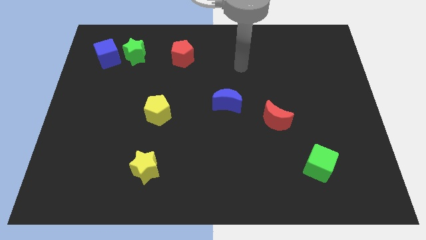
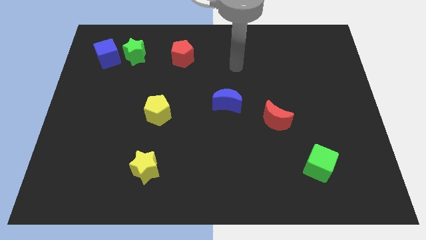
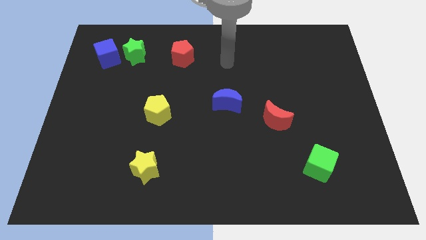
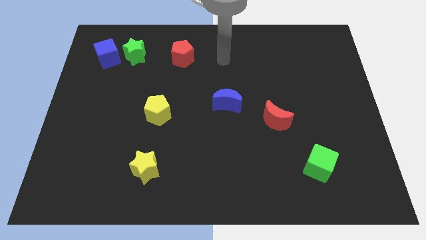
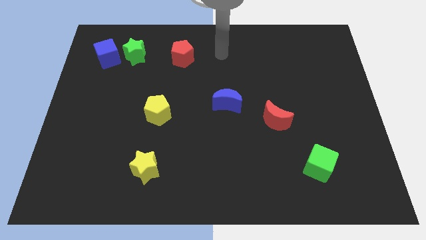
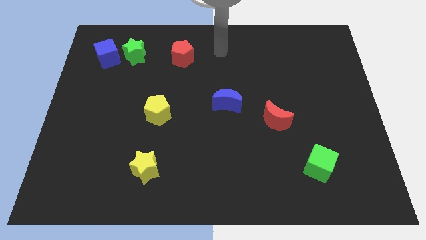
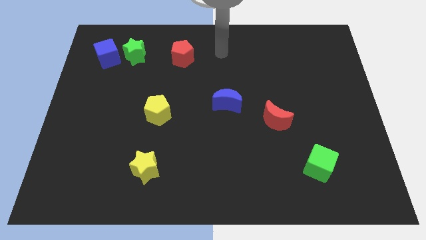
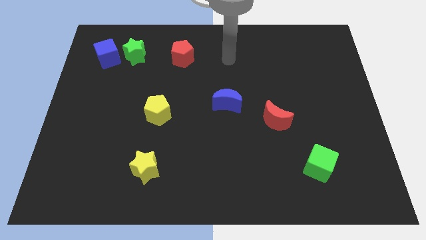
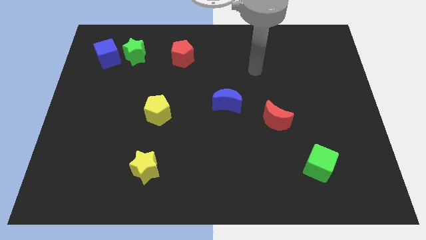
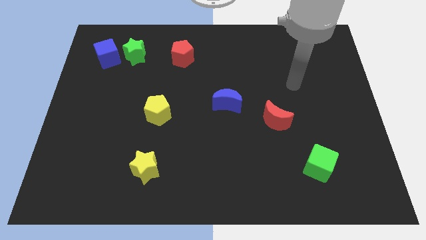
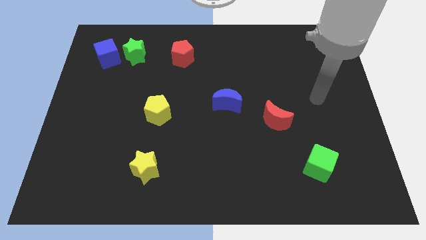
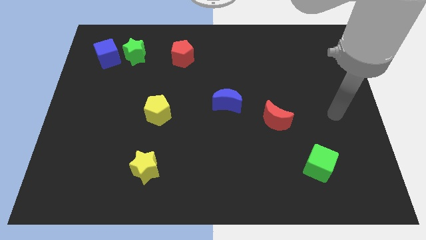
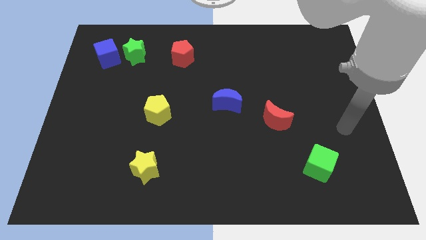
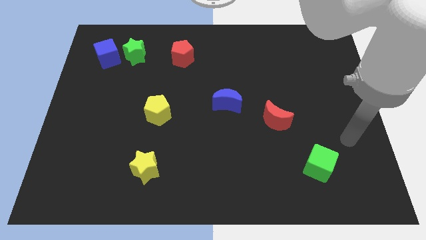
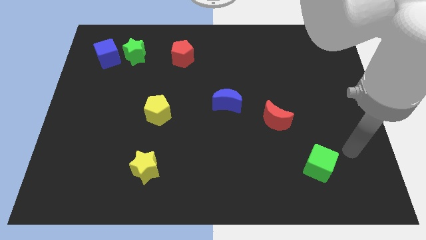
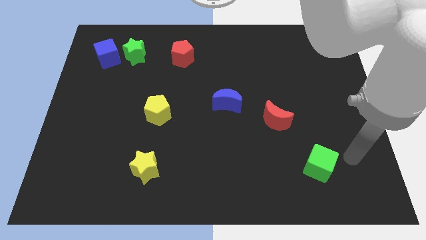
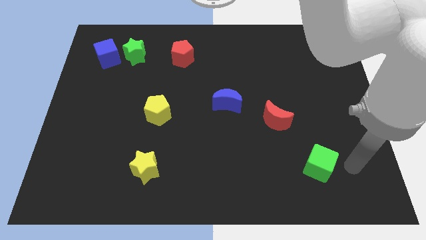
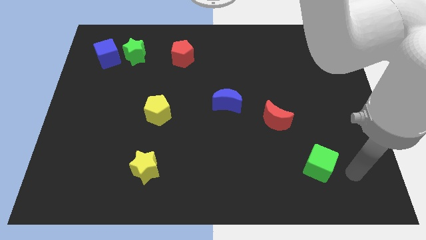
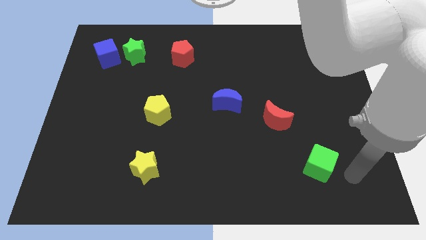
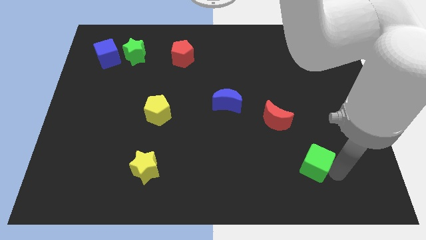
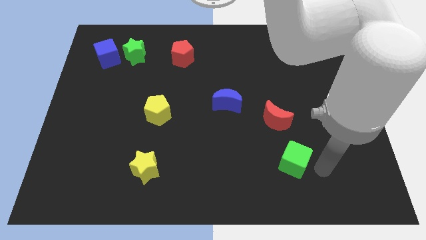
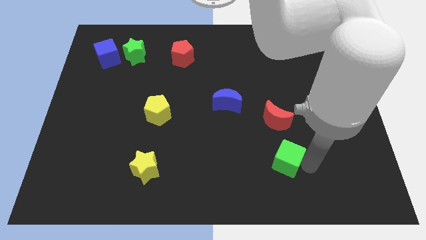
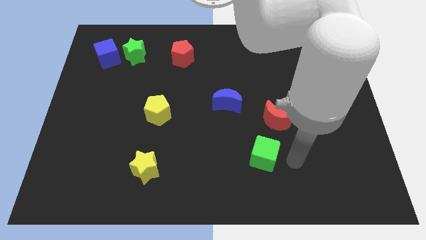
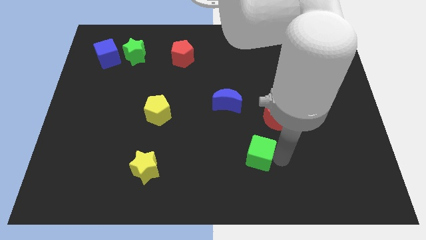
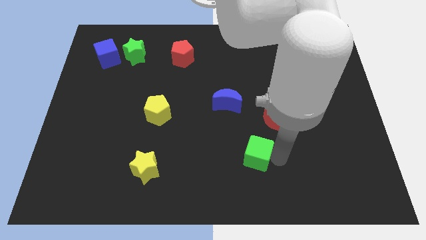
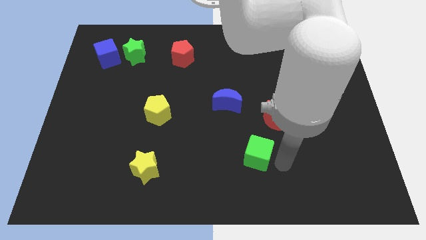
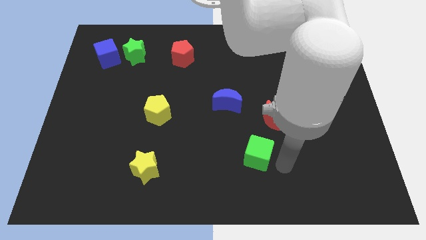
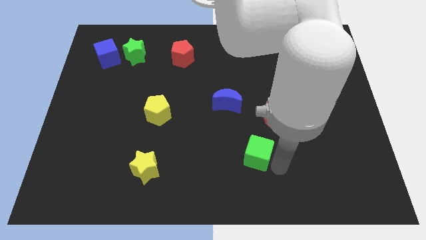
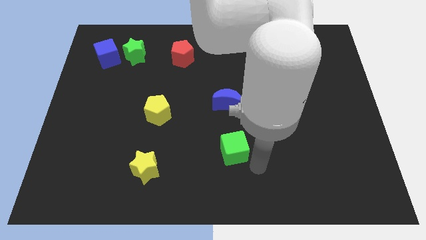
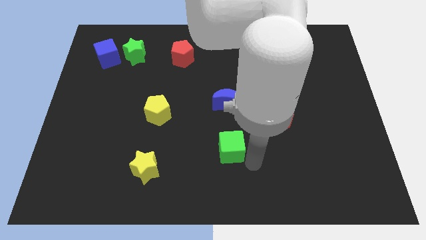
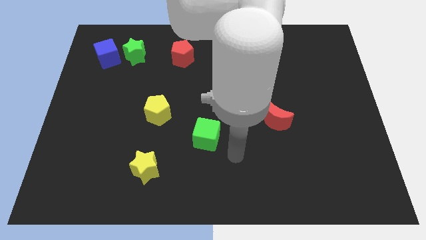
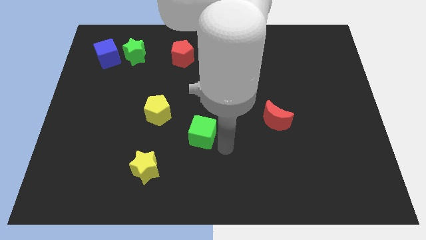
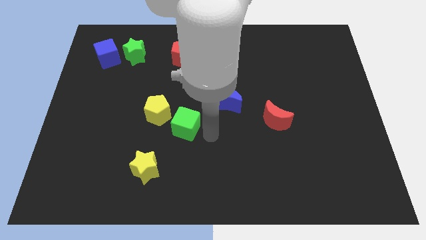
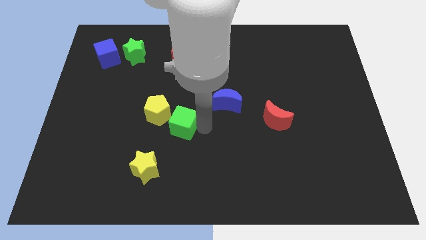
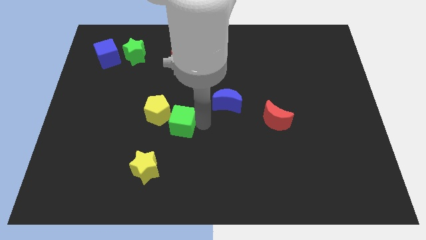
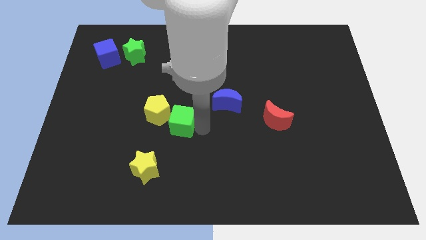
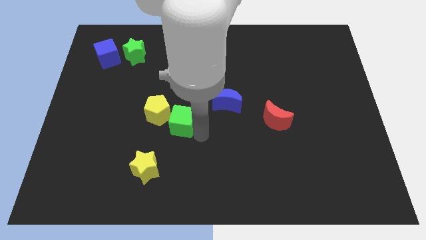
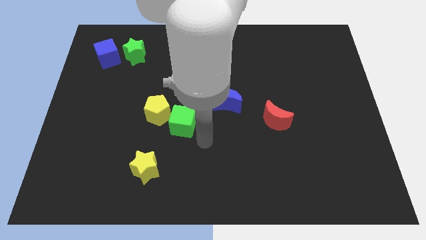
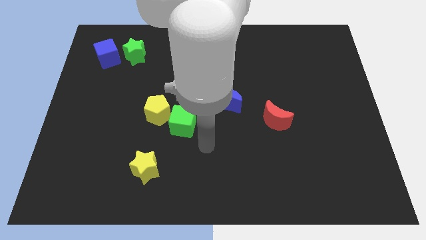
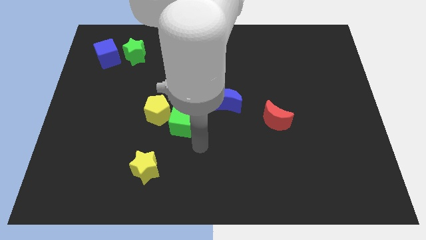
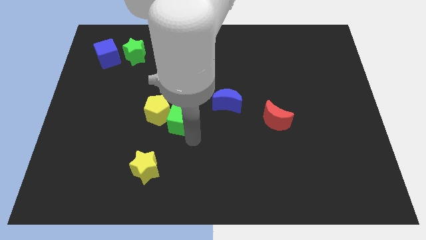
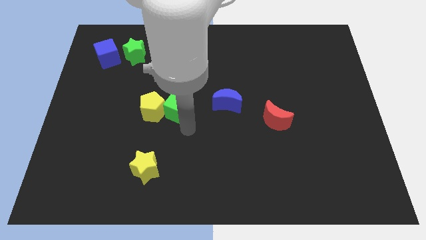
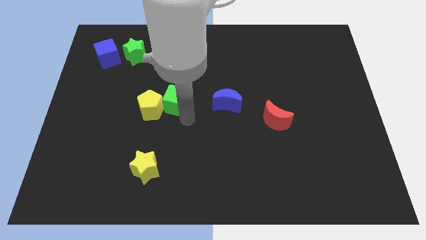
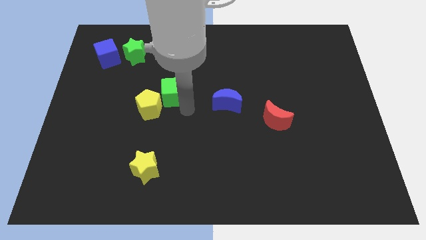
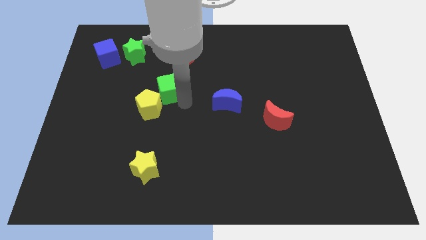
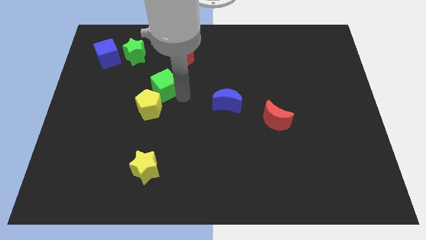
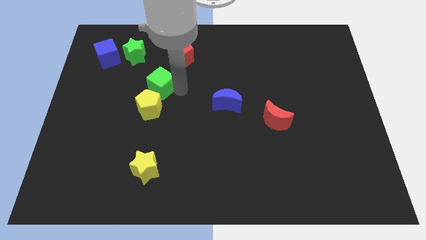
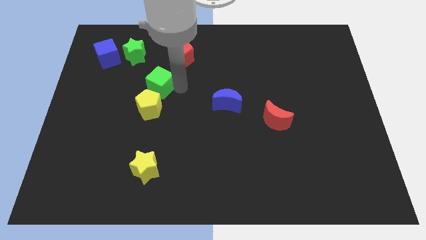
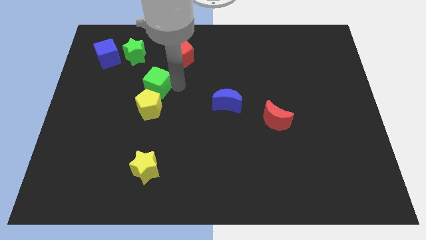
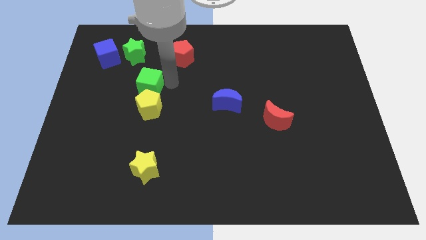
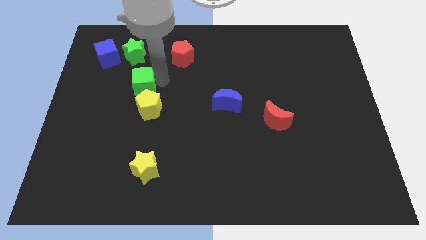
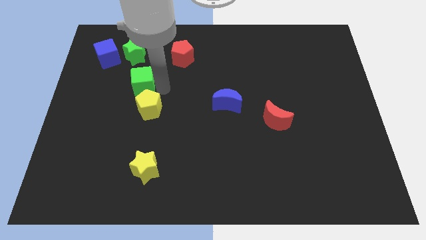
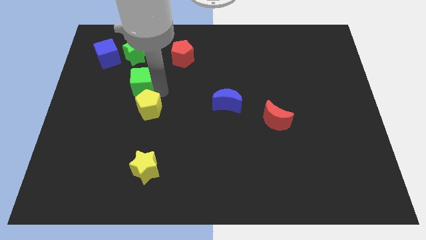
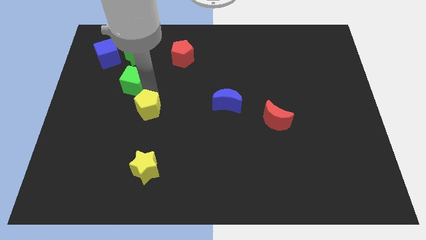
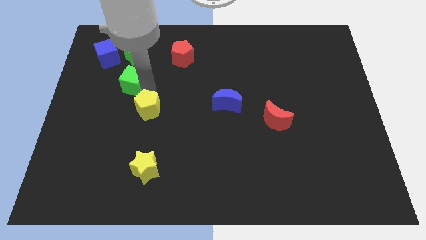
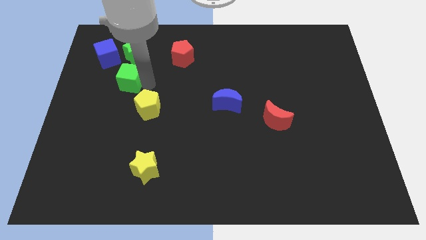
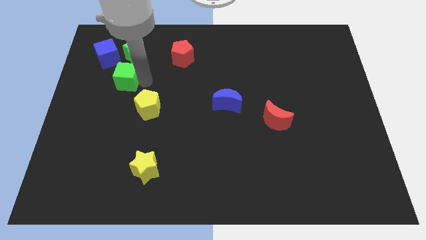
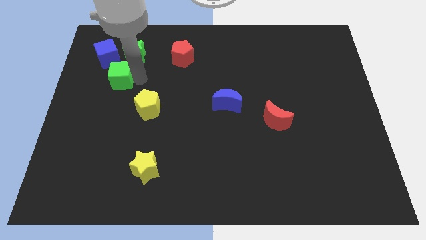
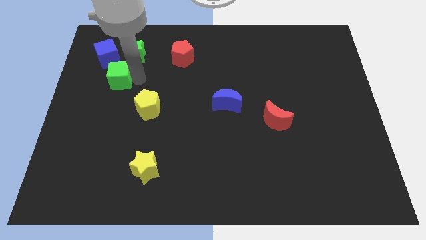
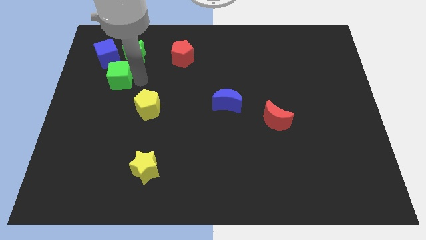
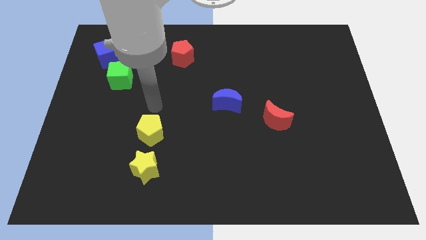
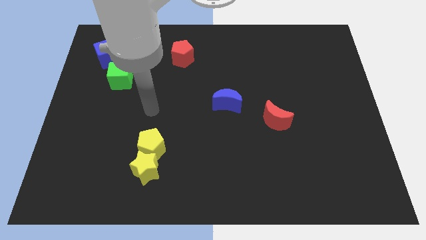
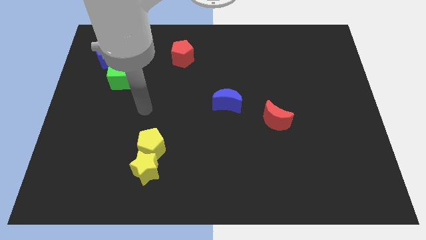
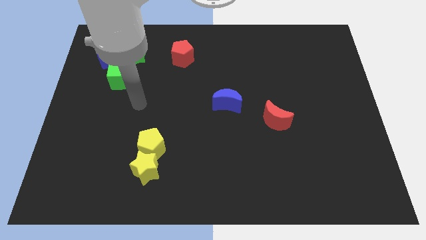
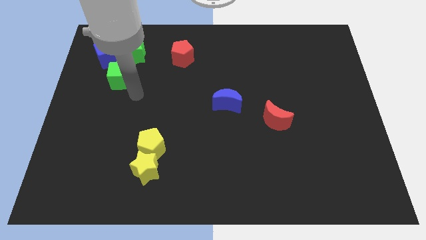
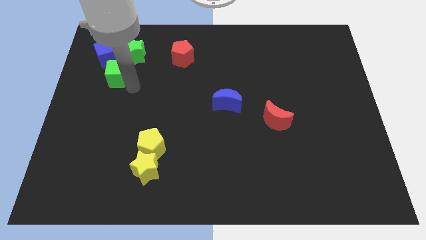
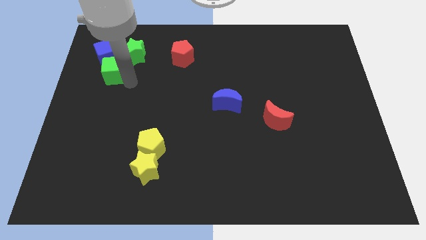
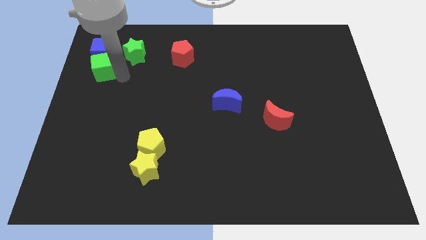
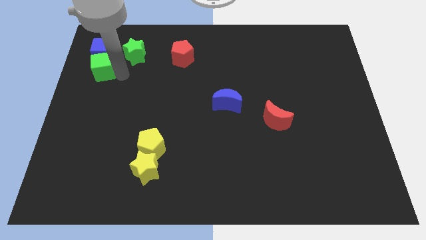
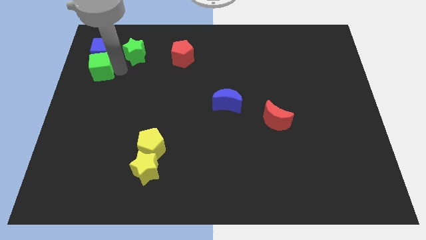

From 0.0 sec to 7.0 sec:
put the green cube towards the blue cube

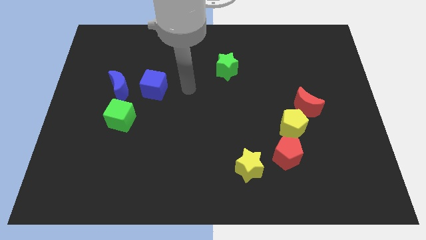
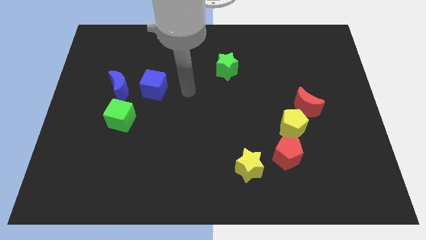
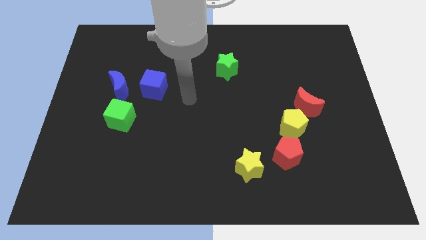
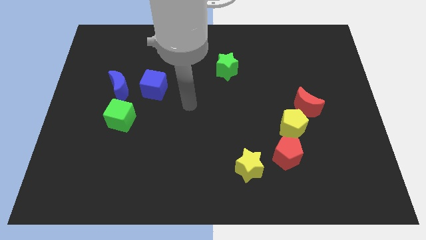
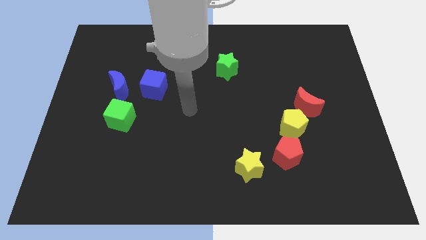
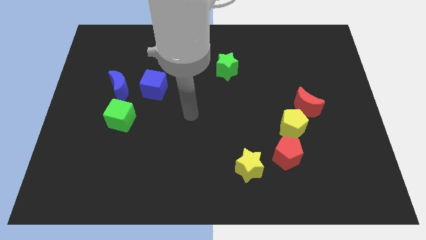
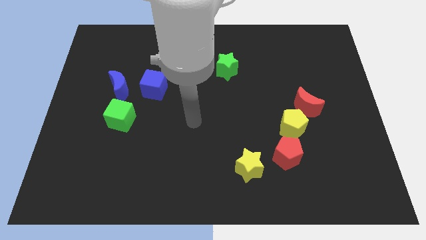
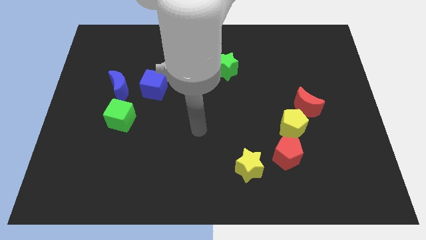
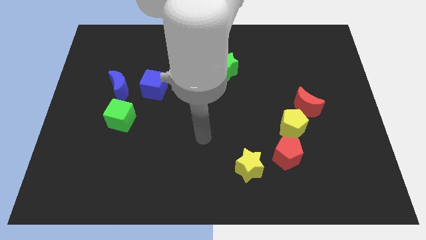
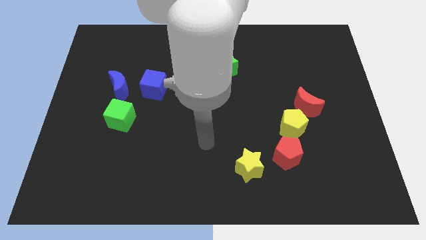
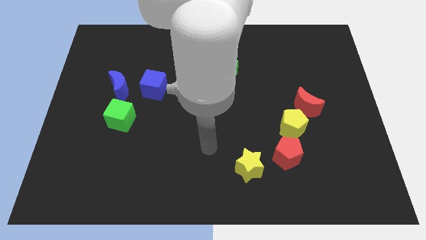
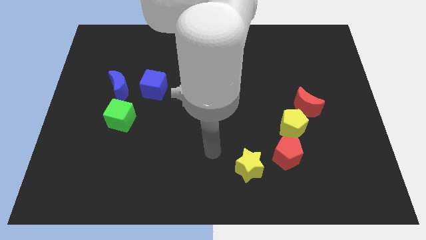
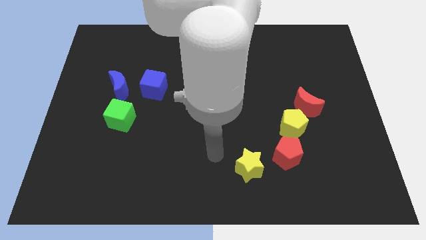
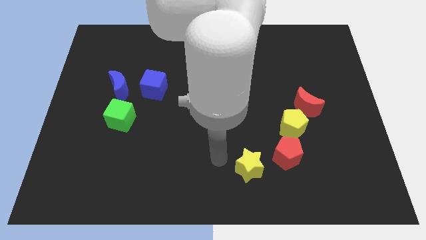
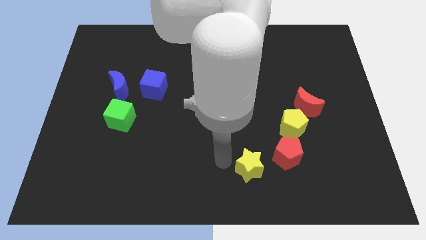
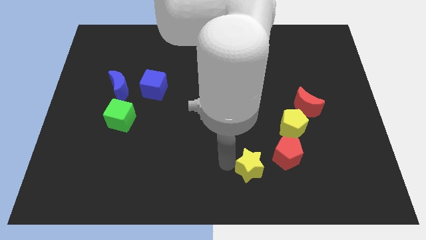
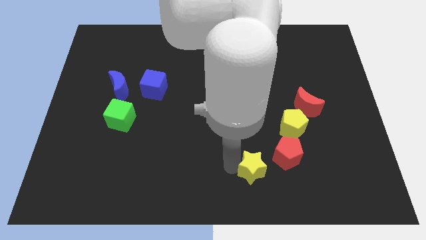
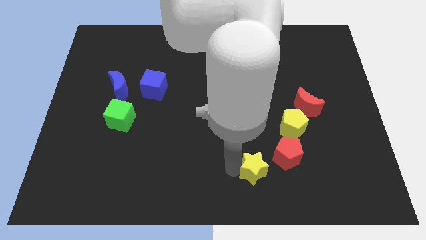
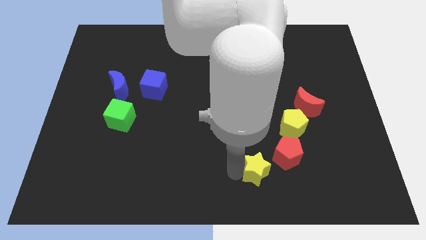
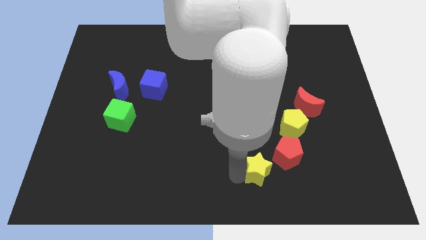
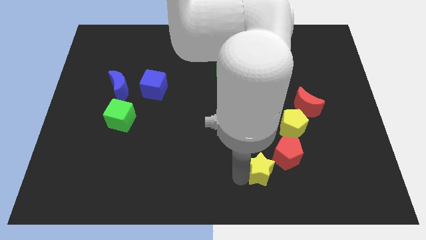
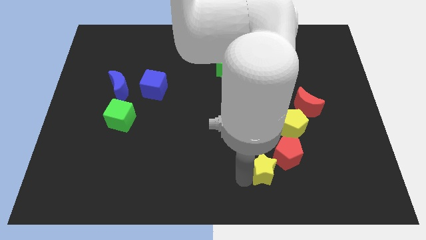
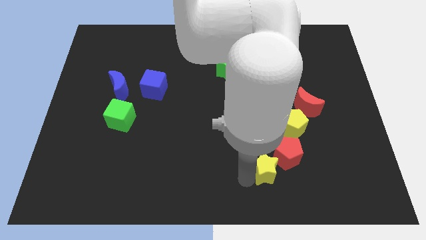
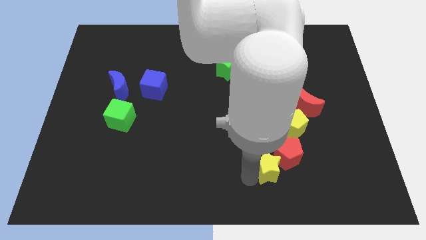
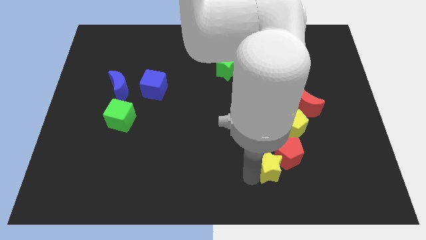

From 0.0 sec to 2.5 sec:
move the yellow star to the red pentagon
